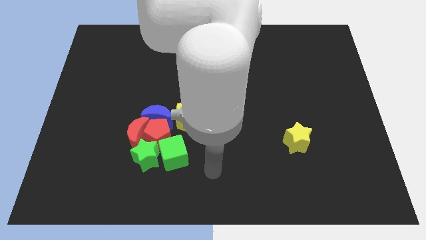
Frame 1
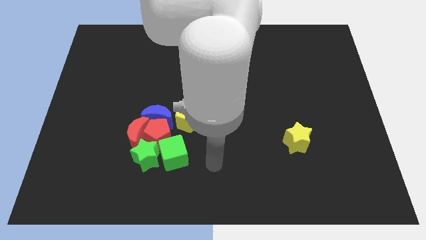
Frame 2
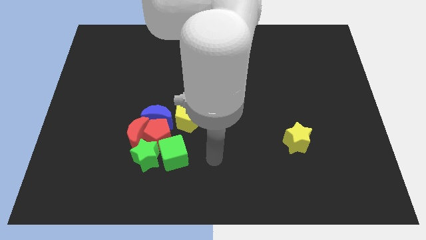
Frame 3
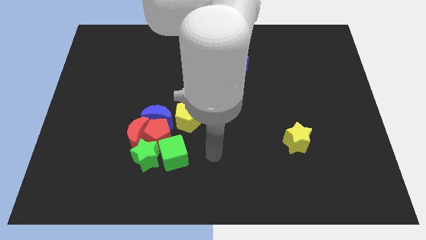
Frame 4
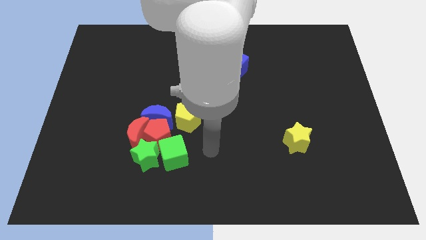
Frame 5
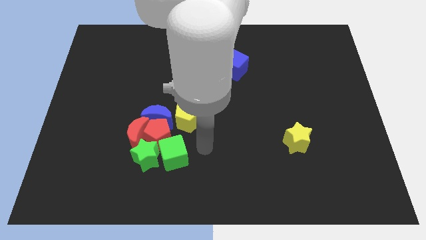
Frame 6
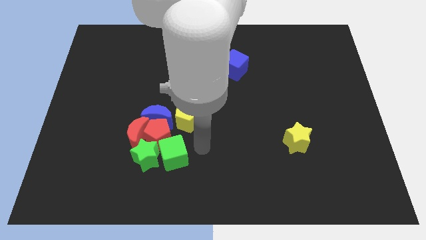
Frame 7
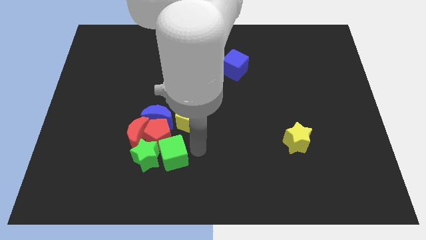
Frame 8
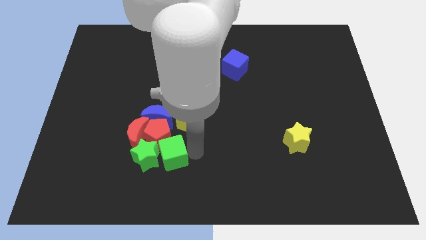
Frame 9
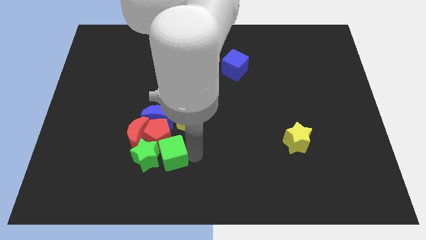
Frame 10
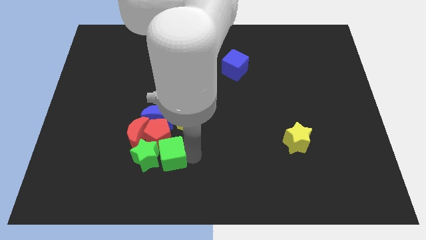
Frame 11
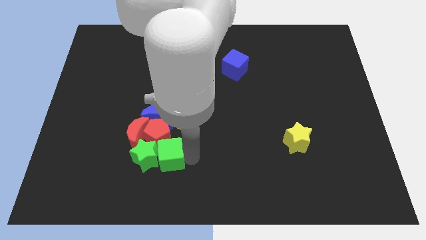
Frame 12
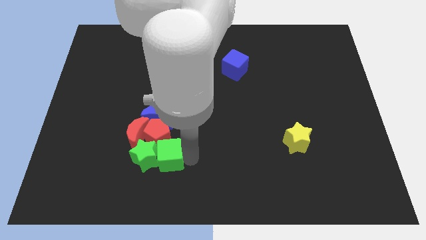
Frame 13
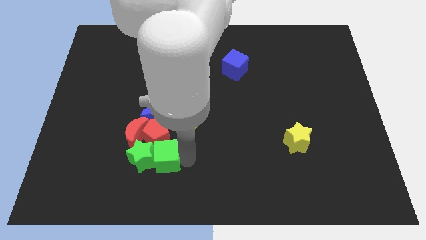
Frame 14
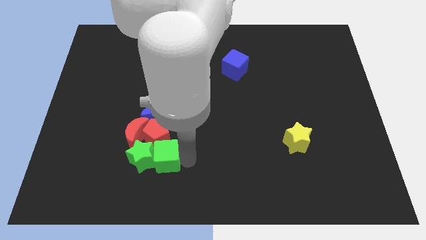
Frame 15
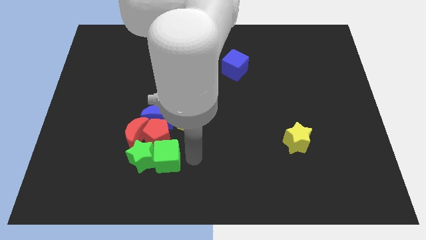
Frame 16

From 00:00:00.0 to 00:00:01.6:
move the green cube slightly into the green star

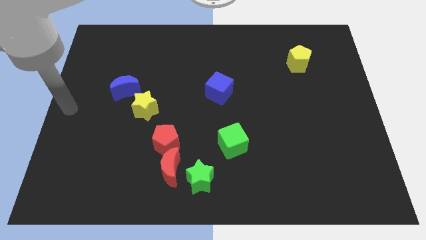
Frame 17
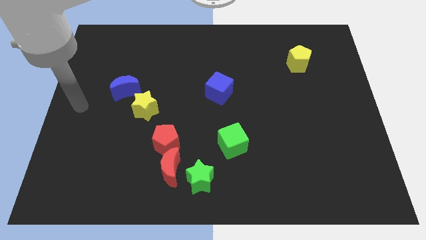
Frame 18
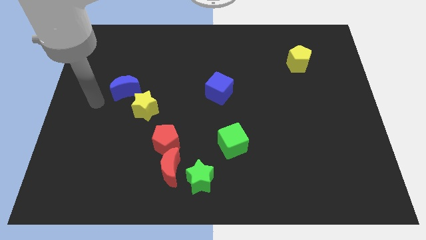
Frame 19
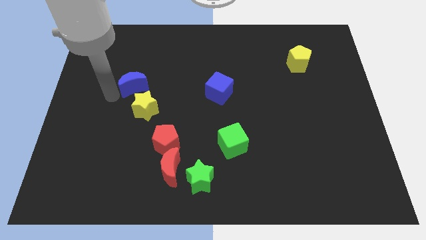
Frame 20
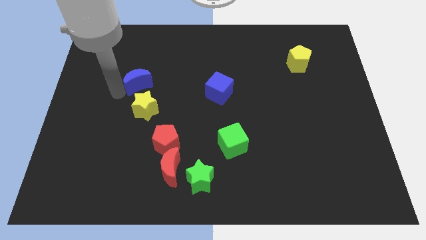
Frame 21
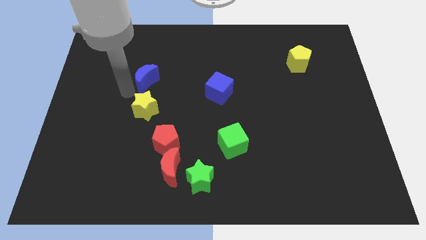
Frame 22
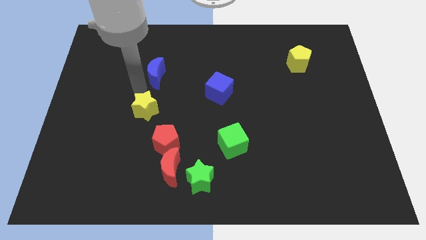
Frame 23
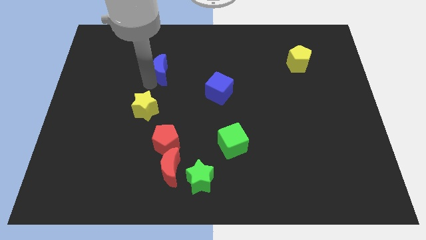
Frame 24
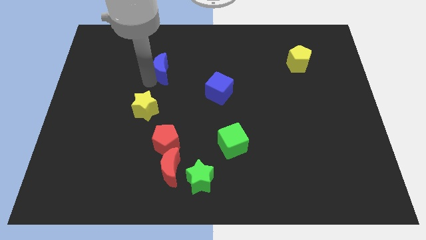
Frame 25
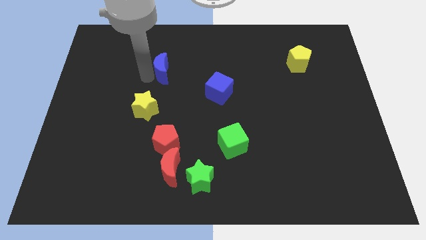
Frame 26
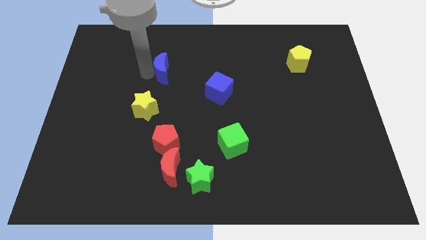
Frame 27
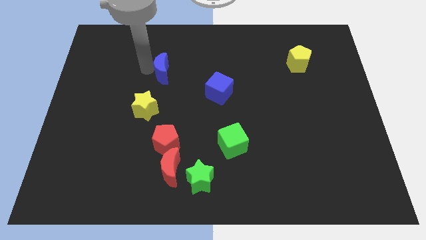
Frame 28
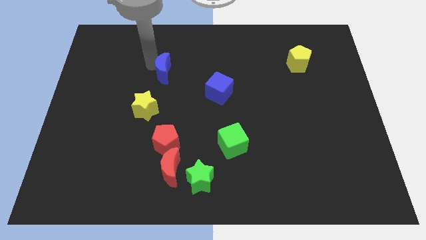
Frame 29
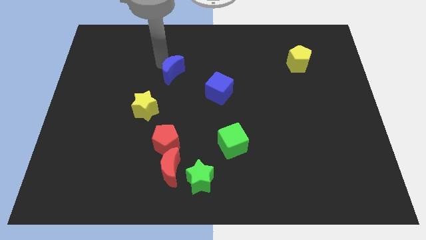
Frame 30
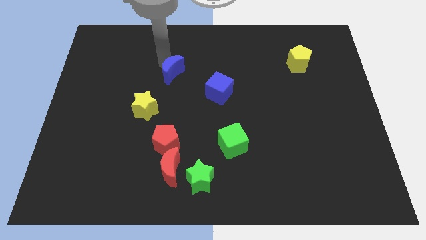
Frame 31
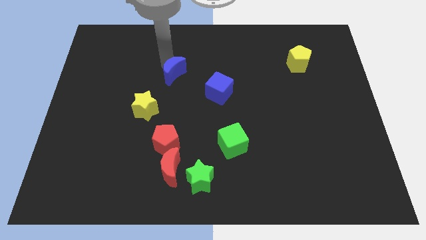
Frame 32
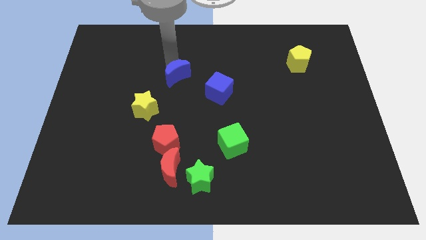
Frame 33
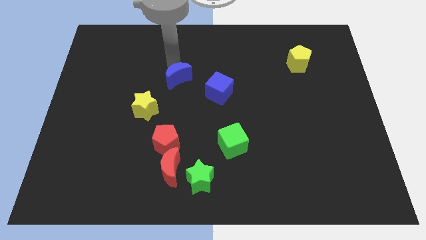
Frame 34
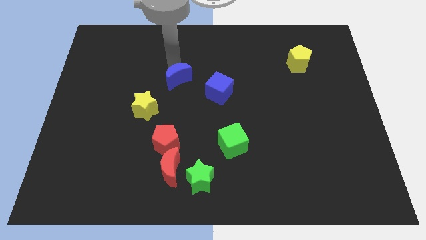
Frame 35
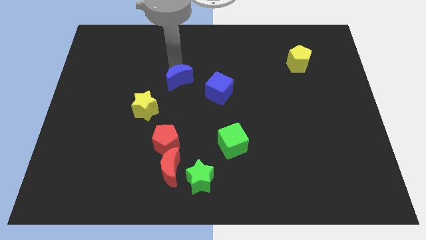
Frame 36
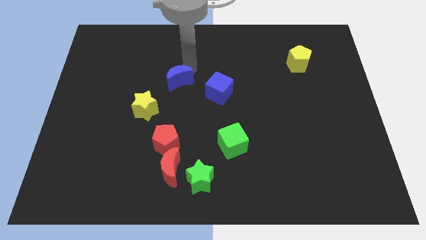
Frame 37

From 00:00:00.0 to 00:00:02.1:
push blue moon towards blue cube

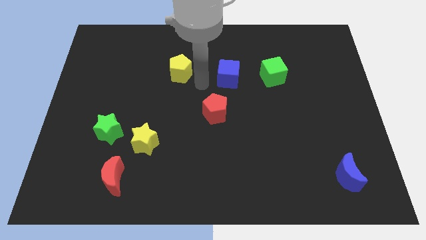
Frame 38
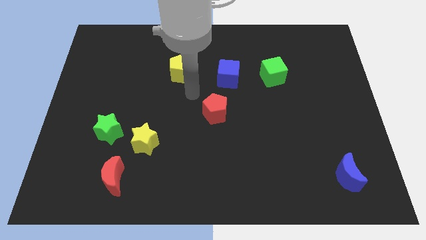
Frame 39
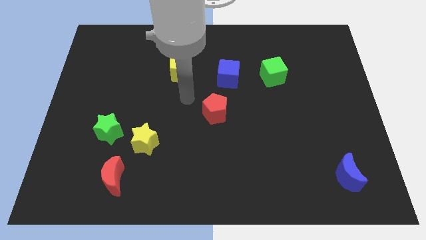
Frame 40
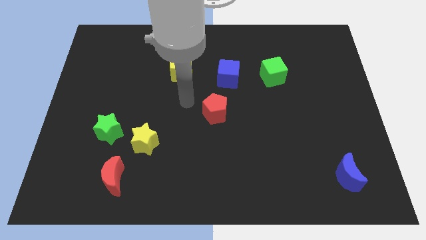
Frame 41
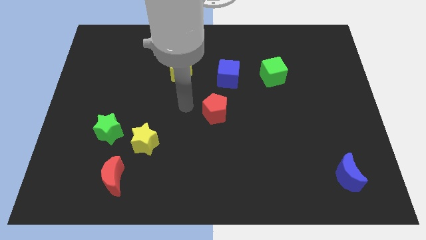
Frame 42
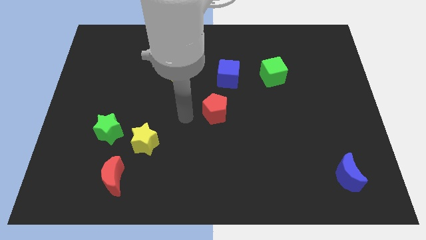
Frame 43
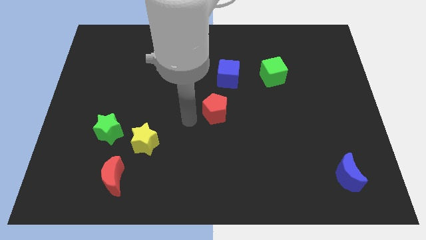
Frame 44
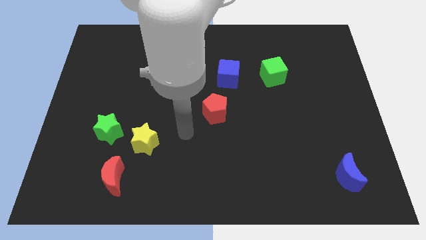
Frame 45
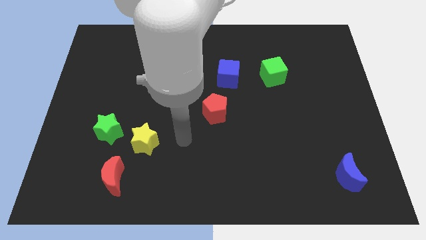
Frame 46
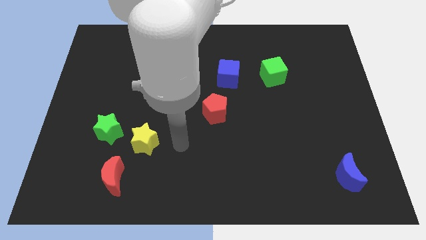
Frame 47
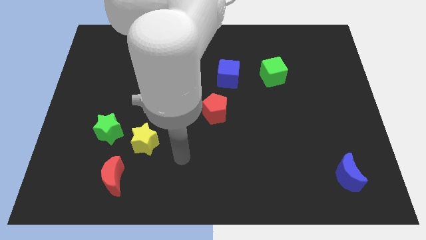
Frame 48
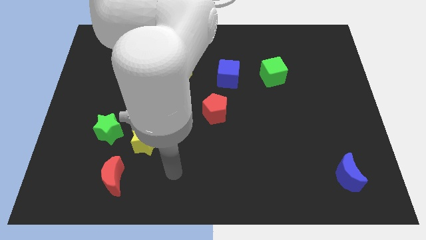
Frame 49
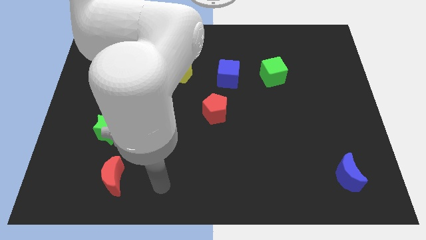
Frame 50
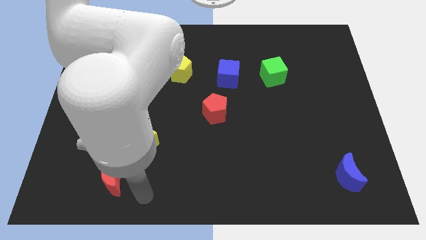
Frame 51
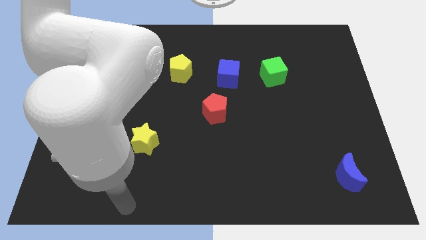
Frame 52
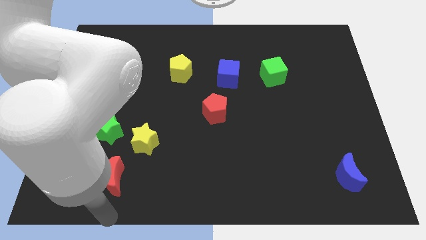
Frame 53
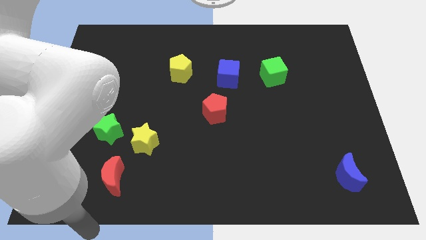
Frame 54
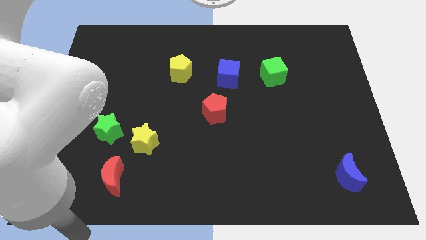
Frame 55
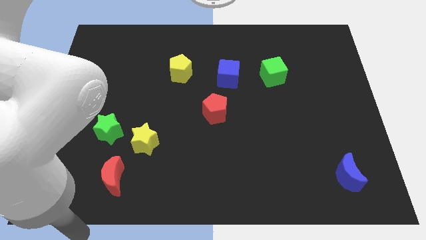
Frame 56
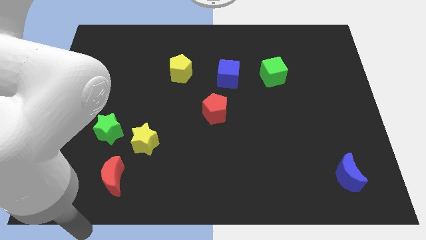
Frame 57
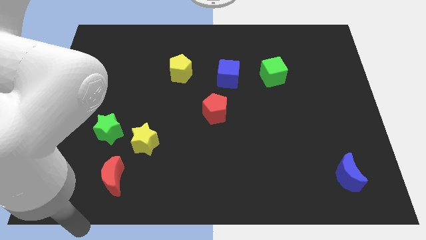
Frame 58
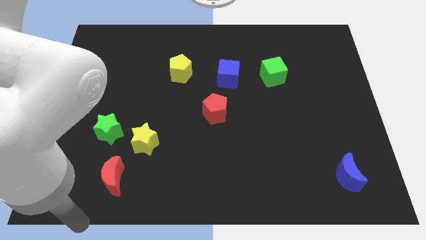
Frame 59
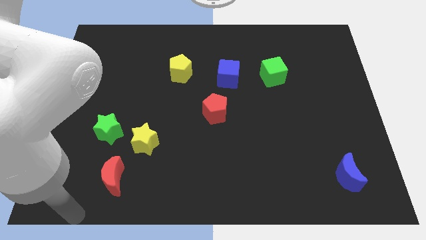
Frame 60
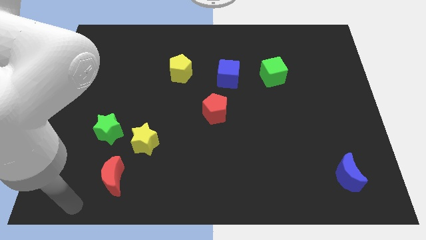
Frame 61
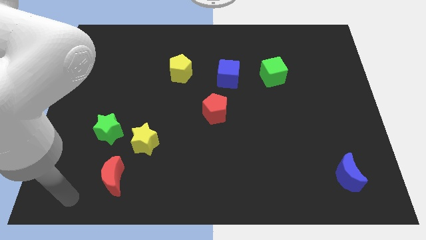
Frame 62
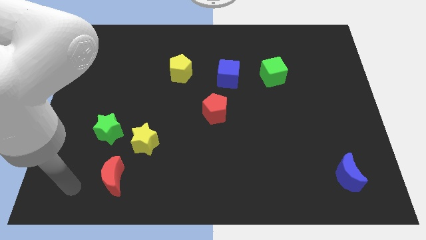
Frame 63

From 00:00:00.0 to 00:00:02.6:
move the arm from the center of the board to the left bottom corner

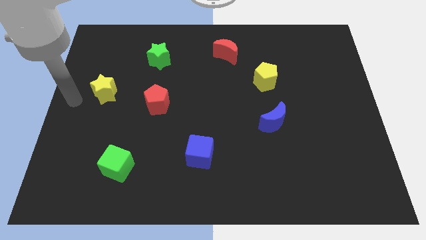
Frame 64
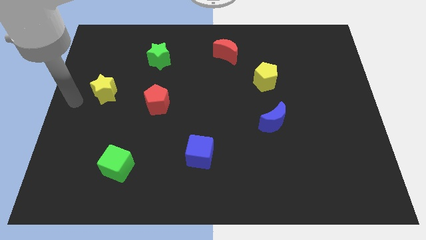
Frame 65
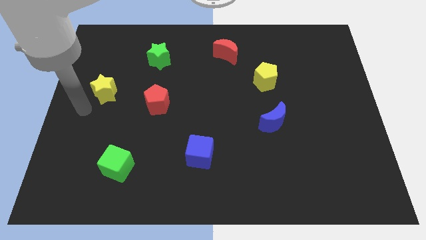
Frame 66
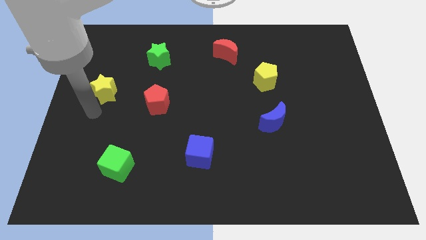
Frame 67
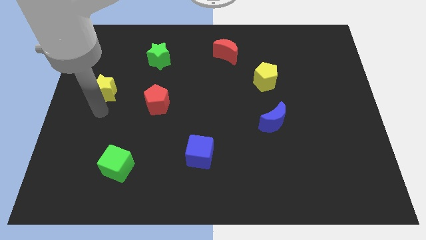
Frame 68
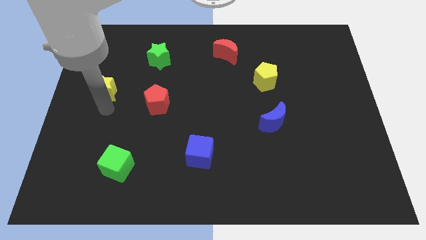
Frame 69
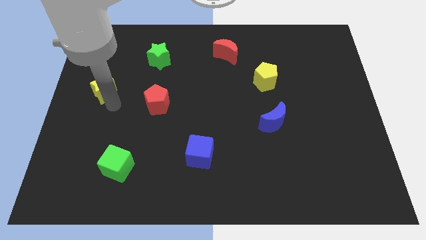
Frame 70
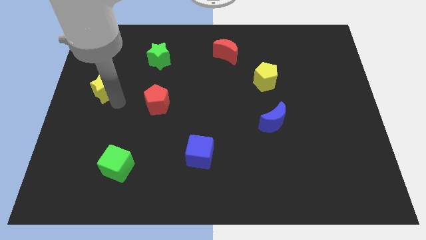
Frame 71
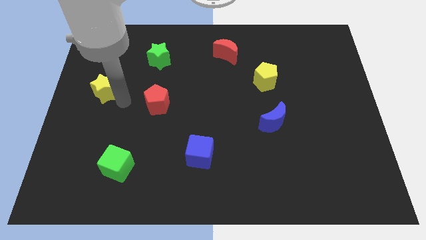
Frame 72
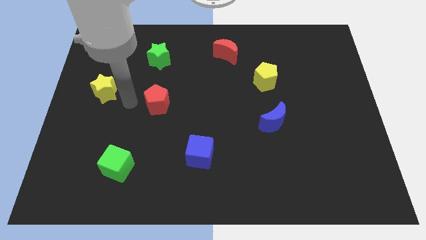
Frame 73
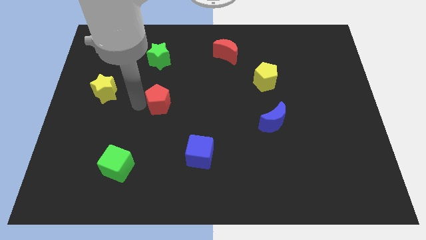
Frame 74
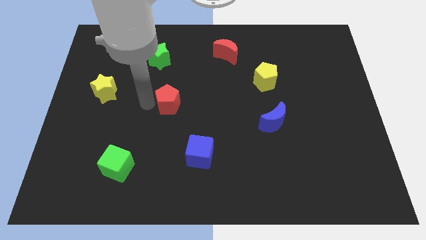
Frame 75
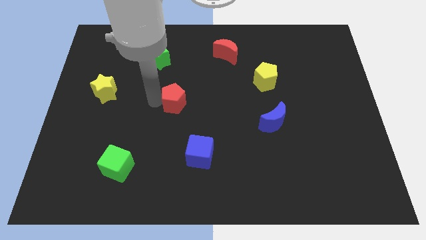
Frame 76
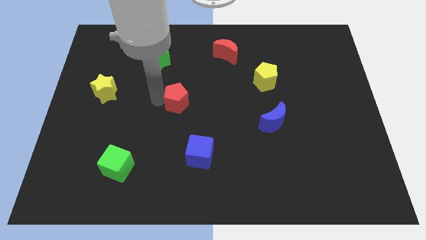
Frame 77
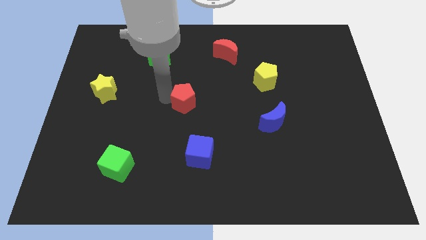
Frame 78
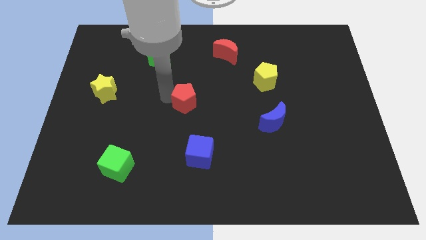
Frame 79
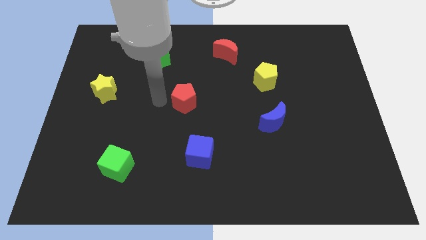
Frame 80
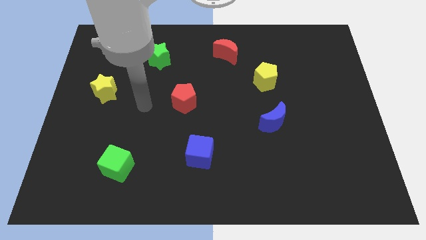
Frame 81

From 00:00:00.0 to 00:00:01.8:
move the red pentagon towards right side

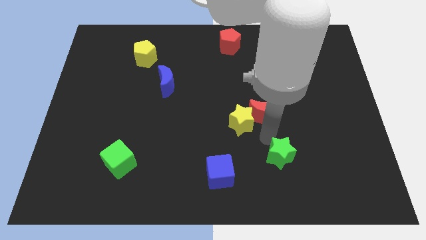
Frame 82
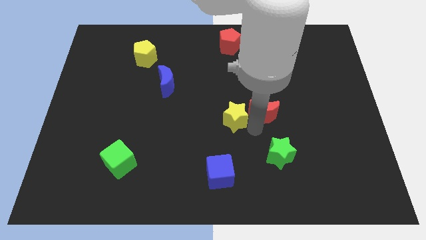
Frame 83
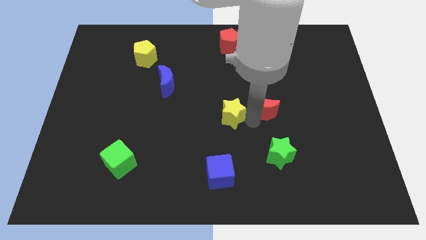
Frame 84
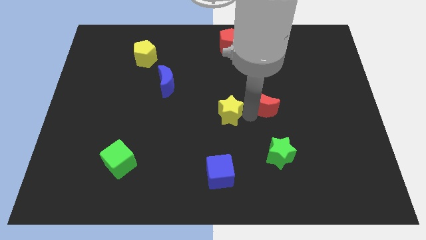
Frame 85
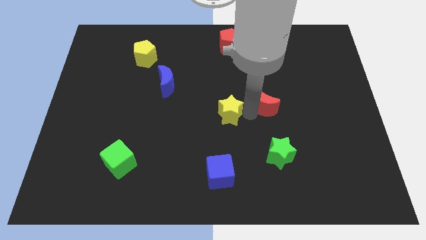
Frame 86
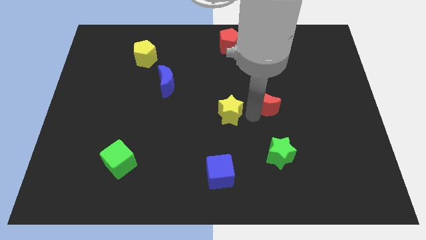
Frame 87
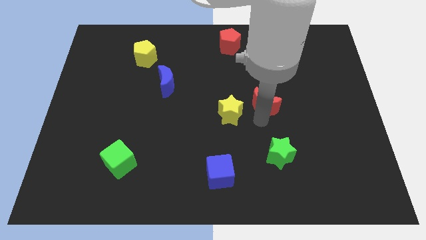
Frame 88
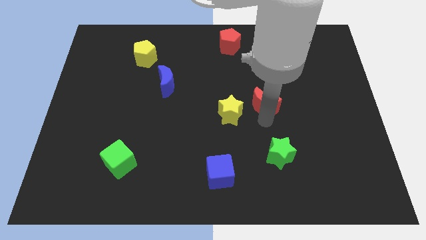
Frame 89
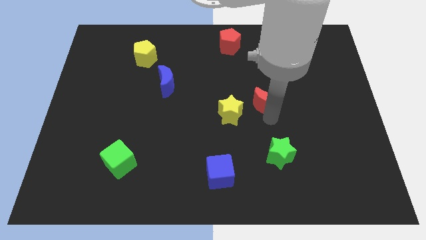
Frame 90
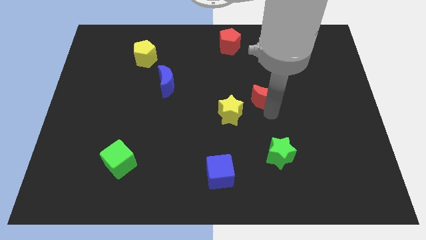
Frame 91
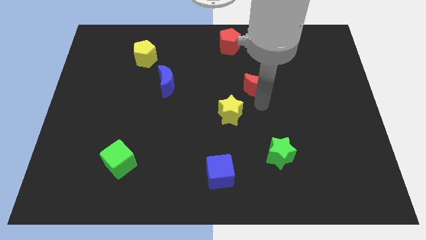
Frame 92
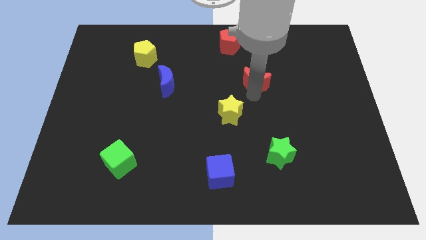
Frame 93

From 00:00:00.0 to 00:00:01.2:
push the red pentagon away from the yellow star
